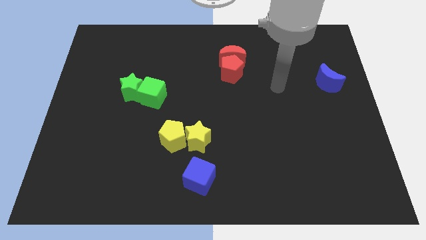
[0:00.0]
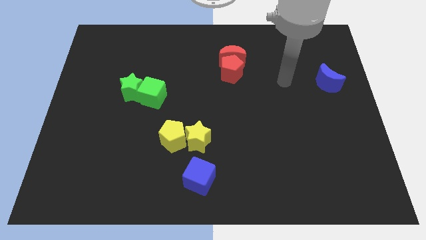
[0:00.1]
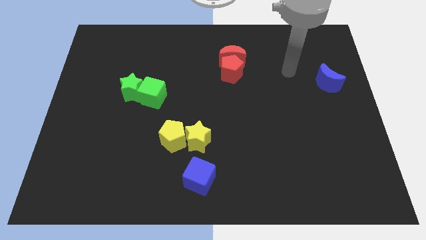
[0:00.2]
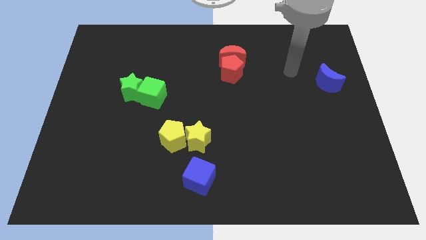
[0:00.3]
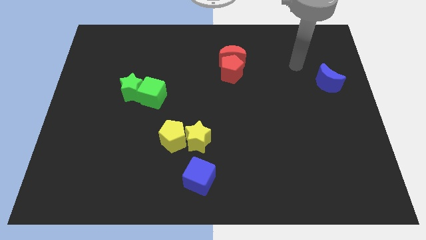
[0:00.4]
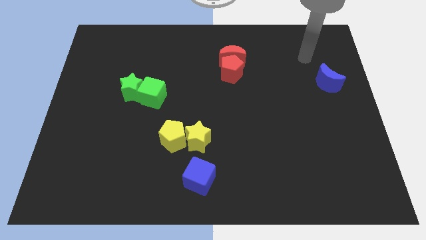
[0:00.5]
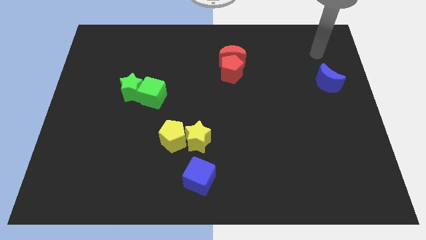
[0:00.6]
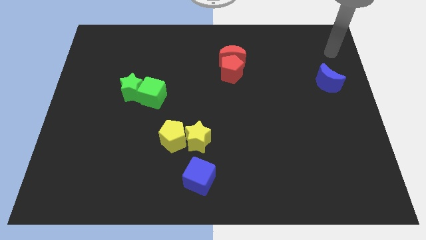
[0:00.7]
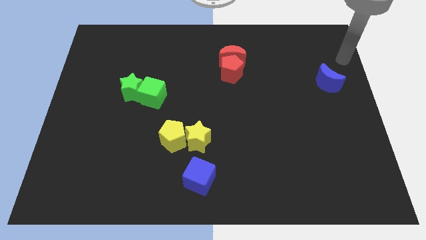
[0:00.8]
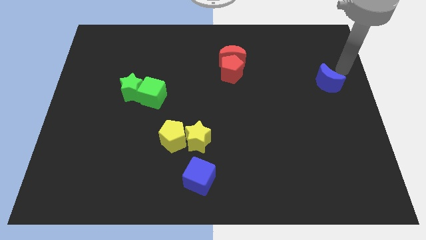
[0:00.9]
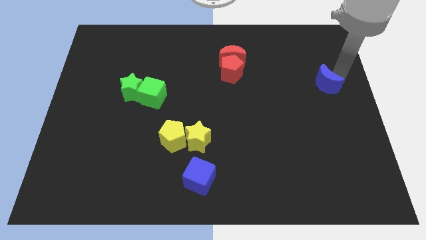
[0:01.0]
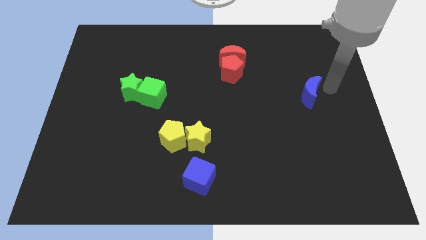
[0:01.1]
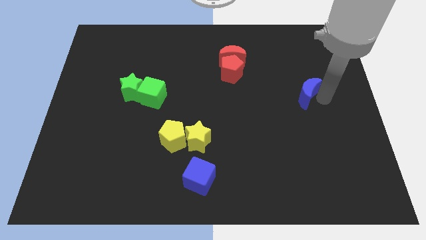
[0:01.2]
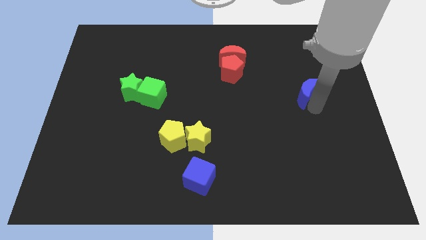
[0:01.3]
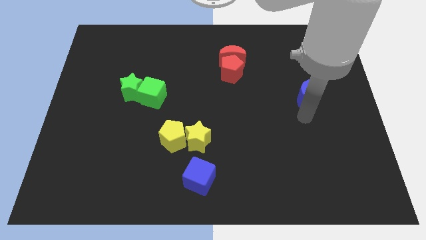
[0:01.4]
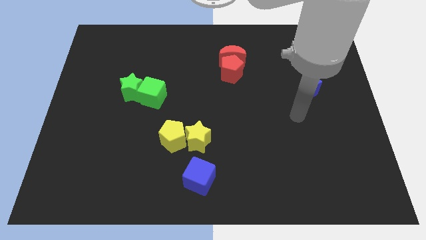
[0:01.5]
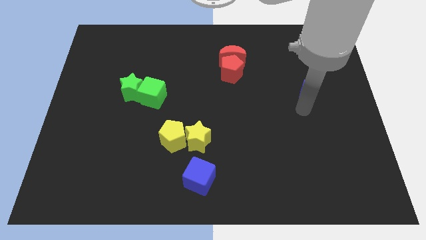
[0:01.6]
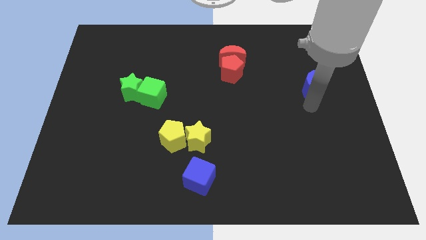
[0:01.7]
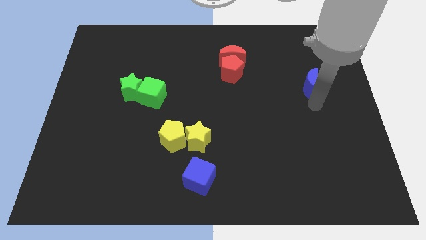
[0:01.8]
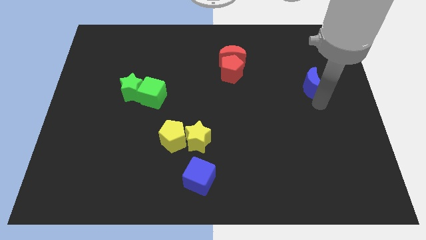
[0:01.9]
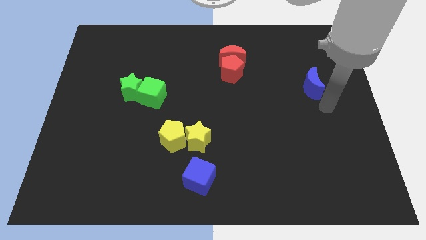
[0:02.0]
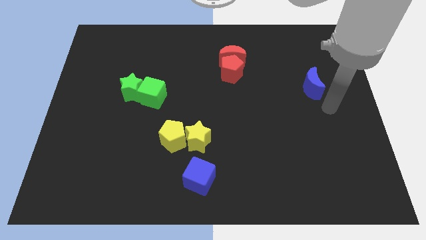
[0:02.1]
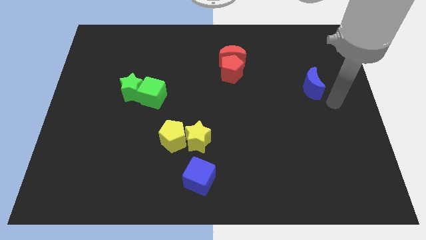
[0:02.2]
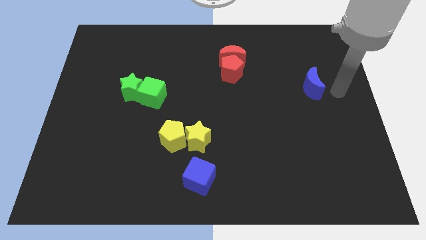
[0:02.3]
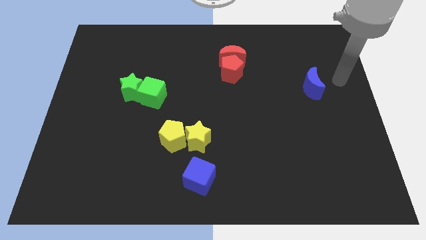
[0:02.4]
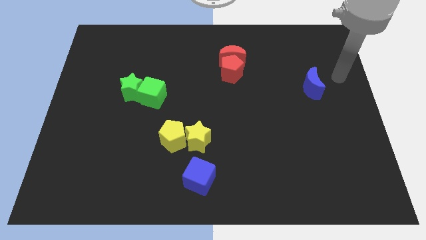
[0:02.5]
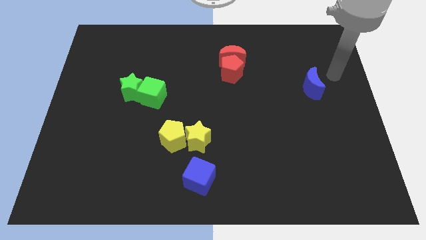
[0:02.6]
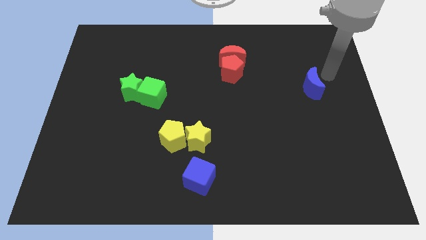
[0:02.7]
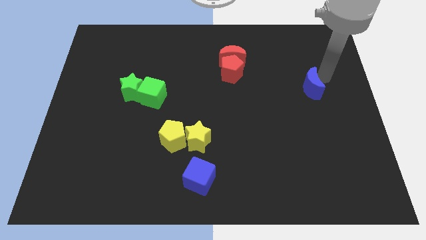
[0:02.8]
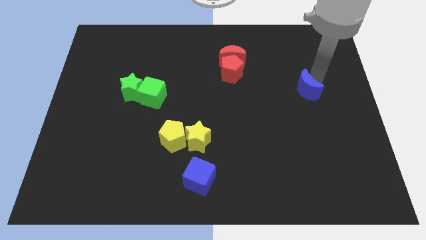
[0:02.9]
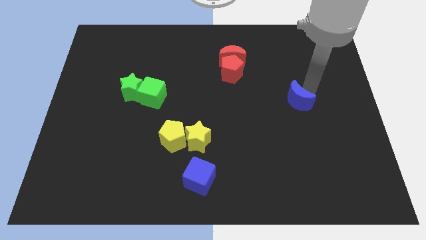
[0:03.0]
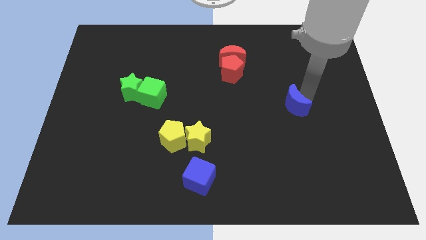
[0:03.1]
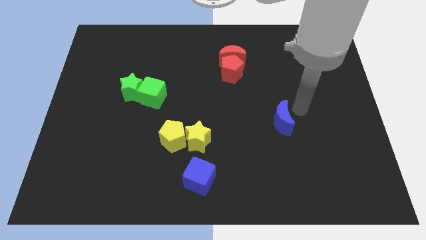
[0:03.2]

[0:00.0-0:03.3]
move the blue moon towards the yellow blocks

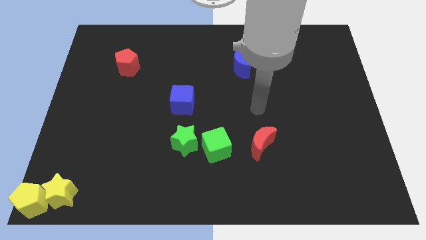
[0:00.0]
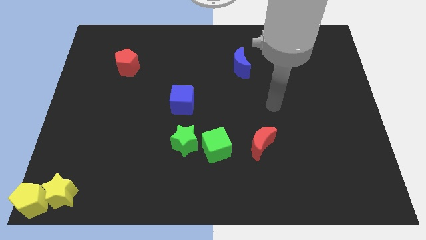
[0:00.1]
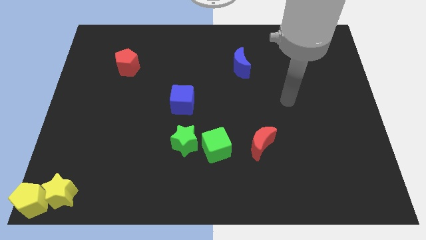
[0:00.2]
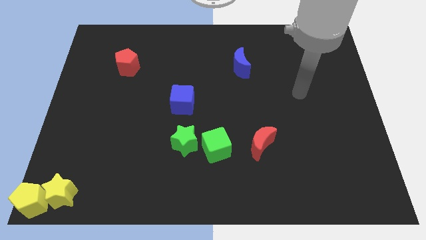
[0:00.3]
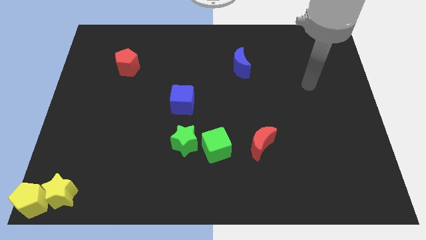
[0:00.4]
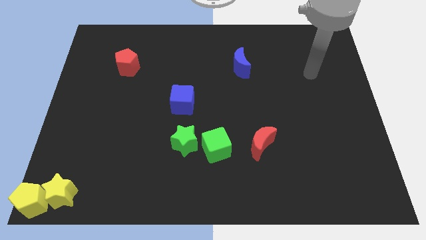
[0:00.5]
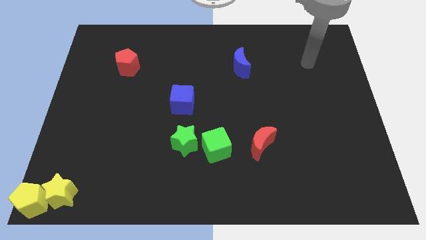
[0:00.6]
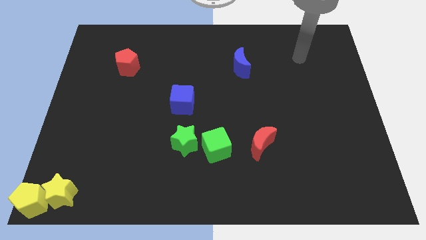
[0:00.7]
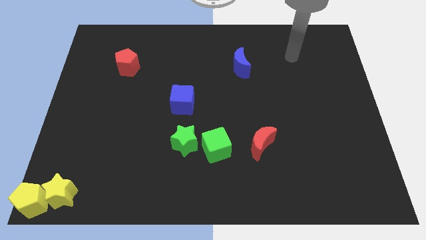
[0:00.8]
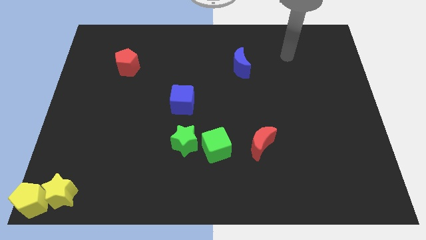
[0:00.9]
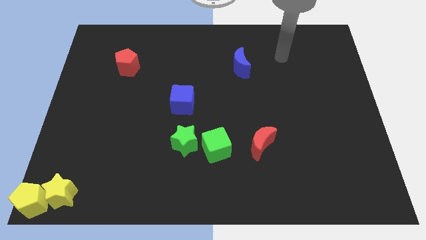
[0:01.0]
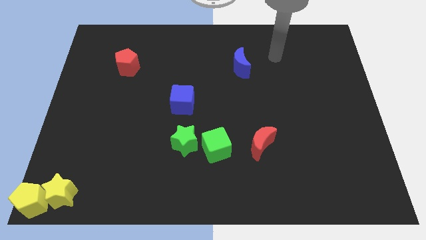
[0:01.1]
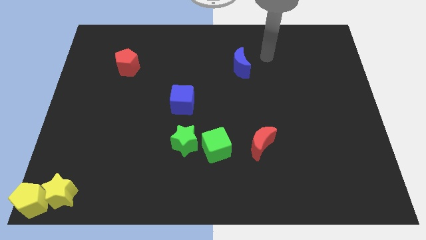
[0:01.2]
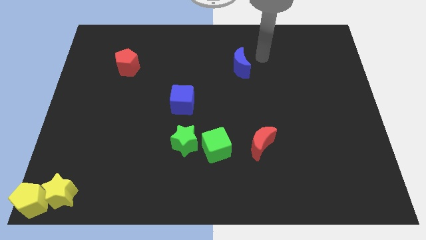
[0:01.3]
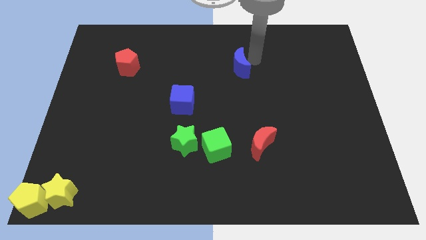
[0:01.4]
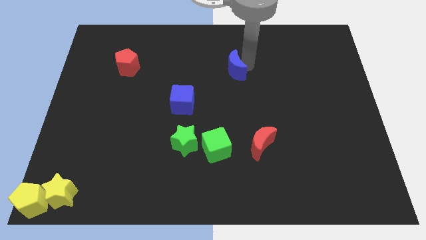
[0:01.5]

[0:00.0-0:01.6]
move your hand to the right of the blue crescent

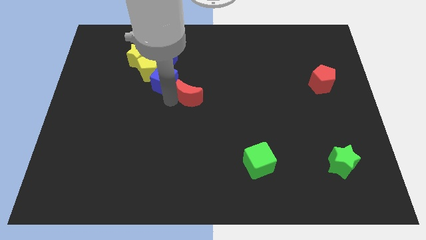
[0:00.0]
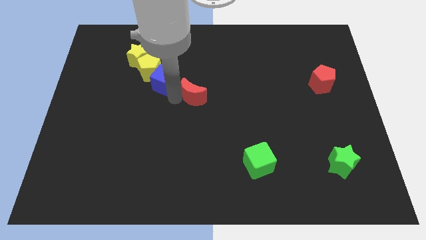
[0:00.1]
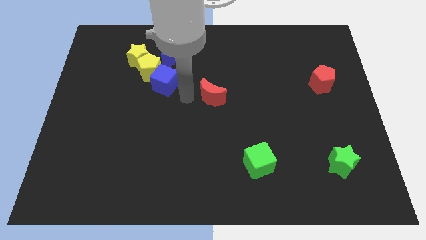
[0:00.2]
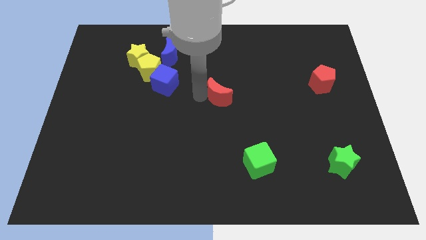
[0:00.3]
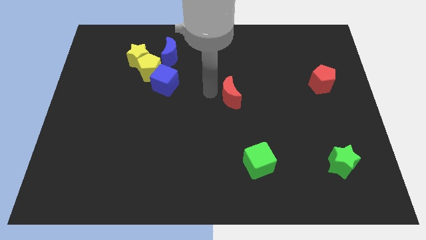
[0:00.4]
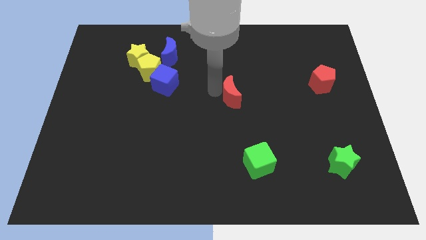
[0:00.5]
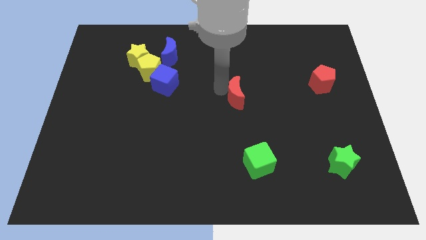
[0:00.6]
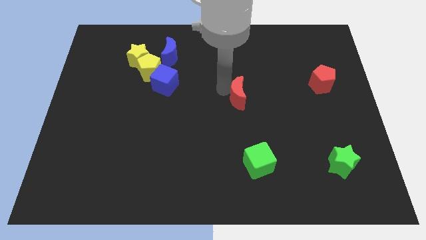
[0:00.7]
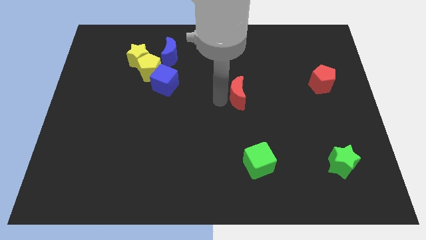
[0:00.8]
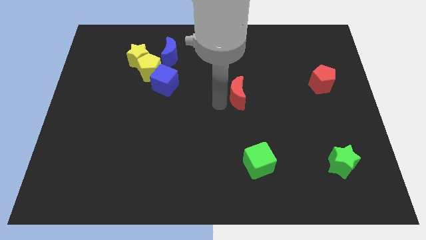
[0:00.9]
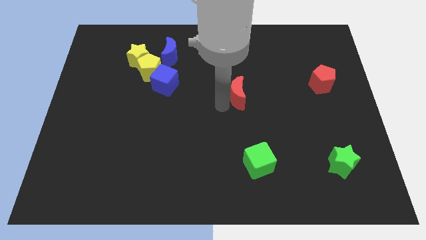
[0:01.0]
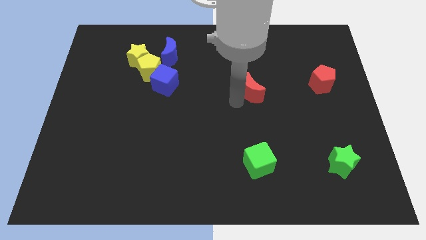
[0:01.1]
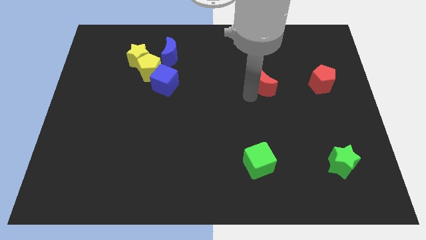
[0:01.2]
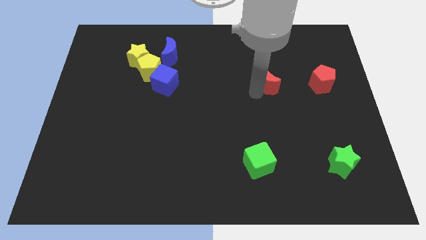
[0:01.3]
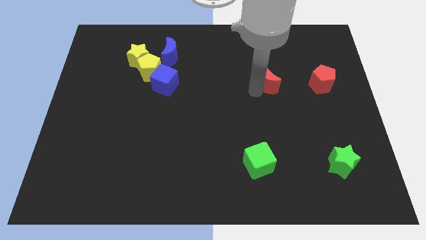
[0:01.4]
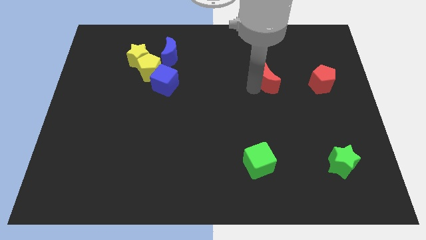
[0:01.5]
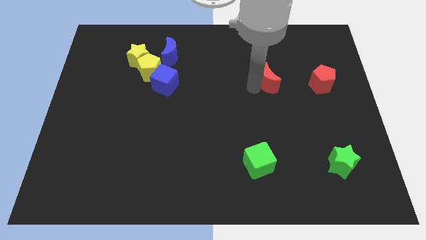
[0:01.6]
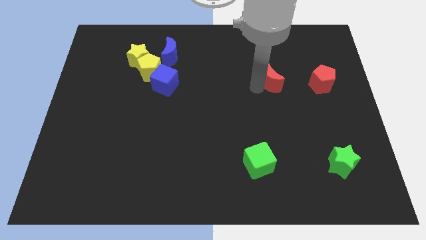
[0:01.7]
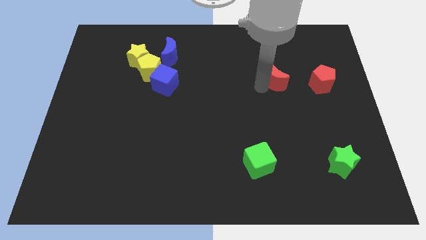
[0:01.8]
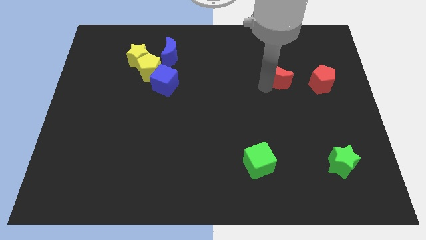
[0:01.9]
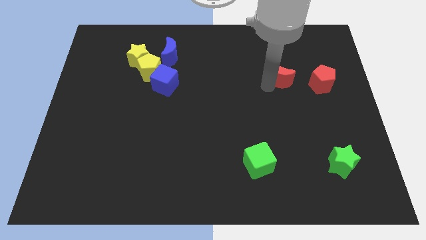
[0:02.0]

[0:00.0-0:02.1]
move the red crescent towards the red pentagon

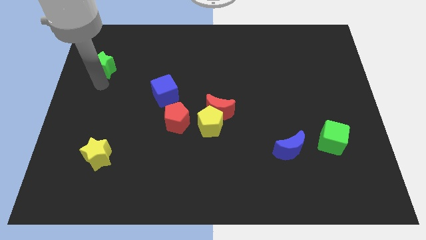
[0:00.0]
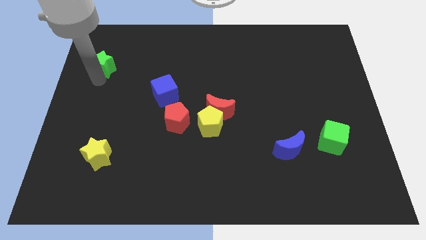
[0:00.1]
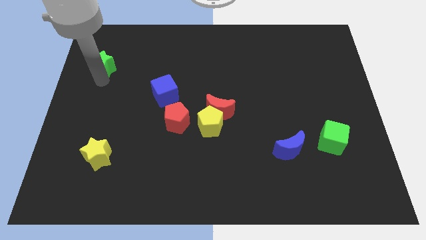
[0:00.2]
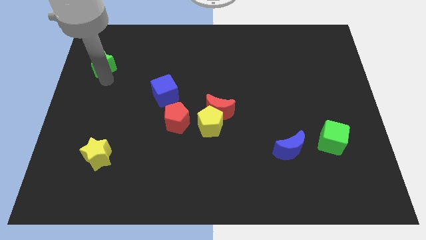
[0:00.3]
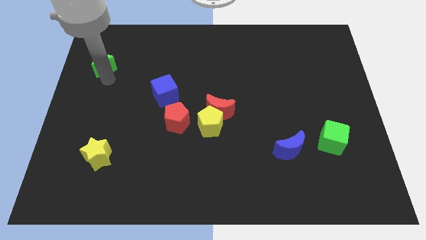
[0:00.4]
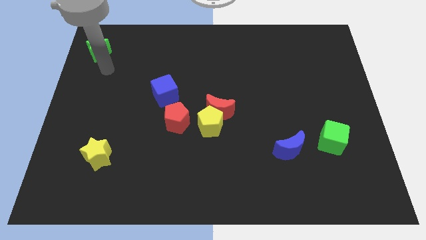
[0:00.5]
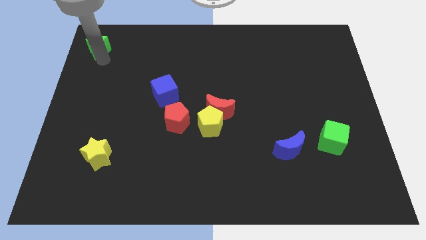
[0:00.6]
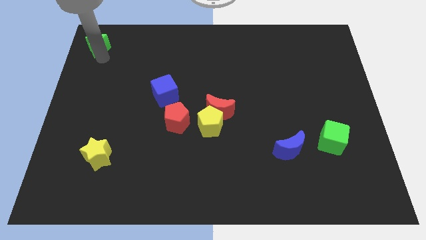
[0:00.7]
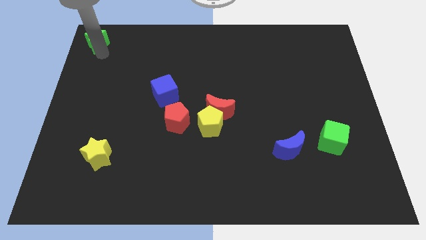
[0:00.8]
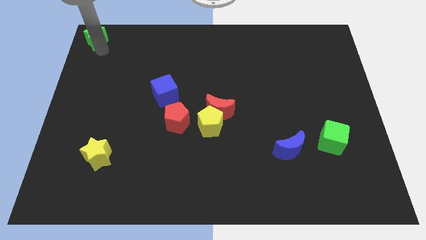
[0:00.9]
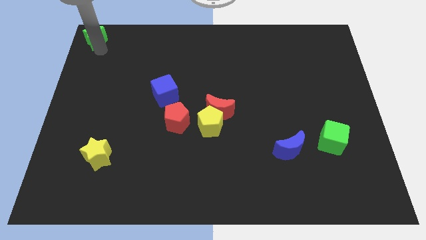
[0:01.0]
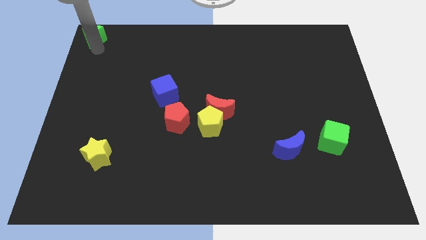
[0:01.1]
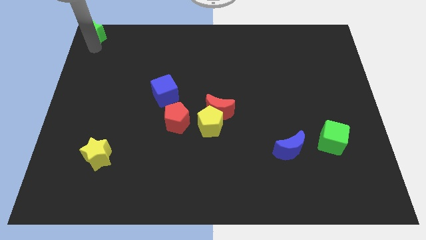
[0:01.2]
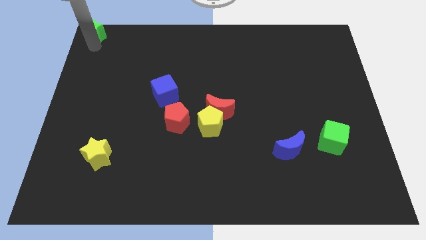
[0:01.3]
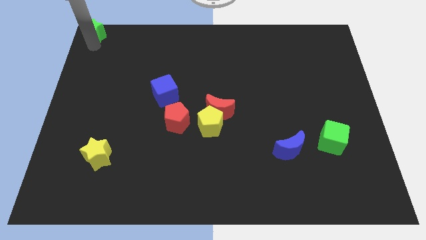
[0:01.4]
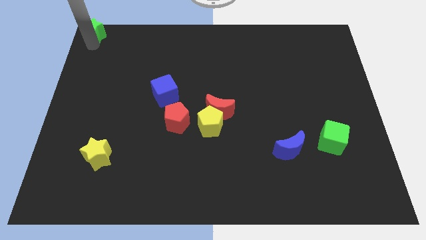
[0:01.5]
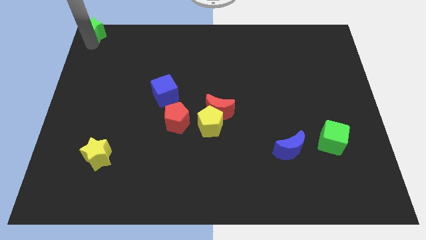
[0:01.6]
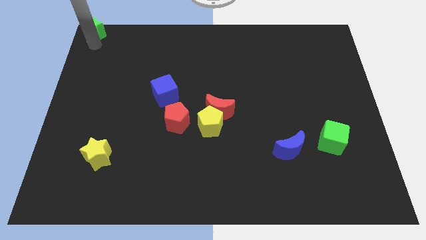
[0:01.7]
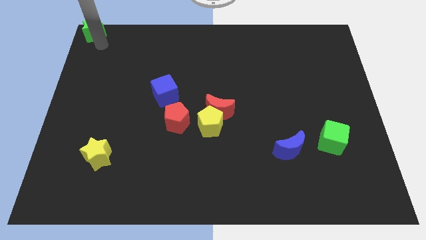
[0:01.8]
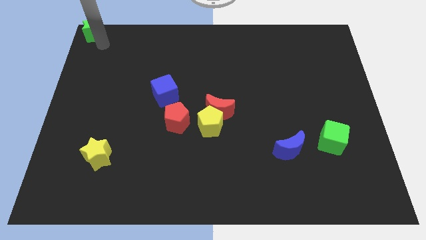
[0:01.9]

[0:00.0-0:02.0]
place the green star to the top left
